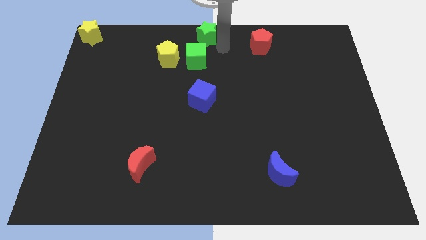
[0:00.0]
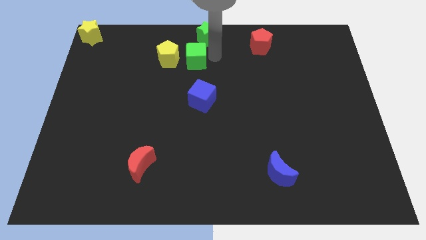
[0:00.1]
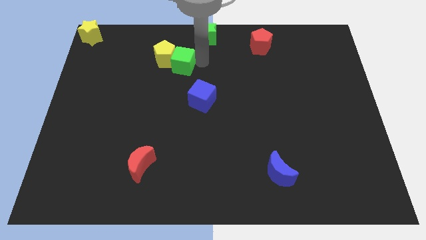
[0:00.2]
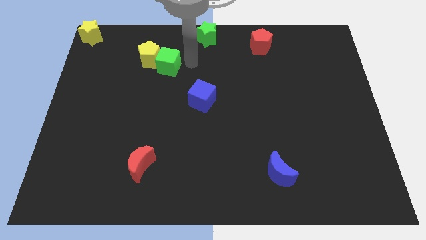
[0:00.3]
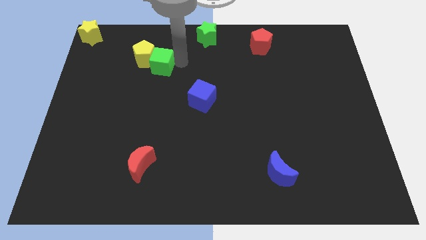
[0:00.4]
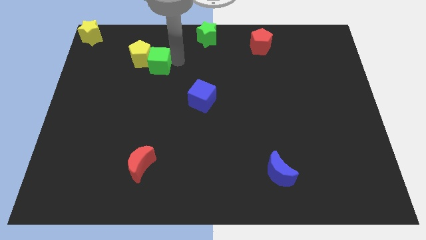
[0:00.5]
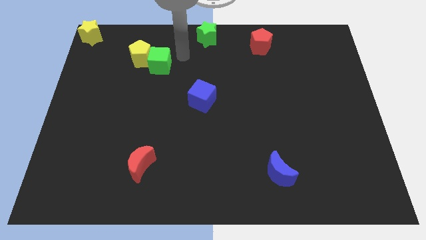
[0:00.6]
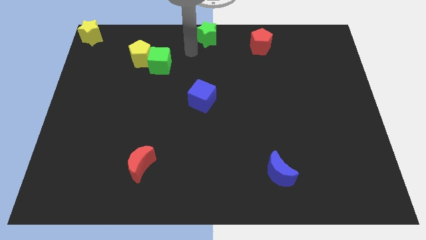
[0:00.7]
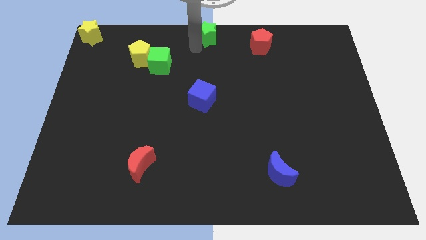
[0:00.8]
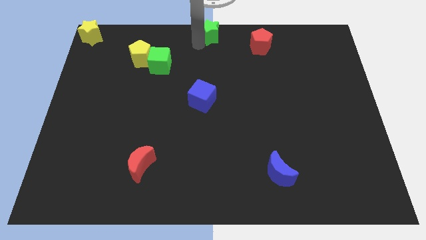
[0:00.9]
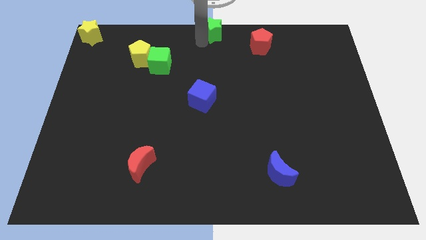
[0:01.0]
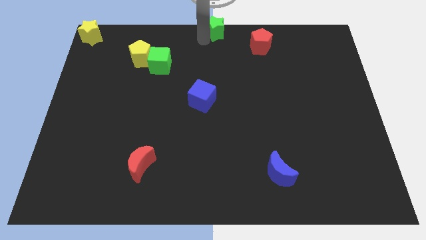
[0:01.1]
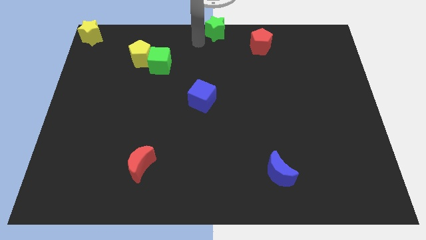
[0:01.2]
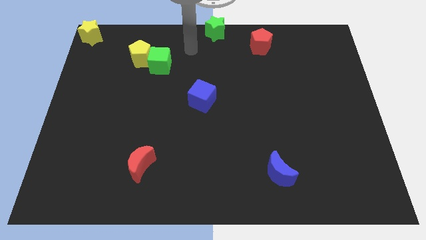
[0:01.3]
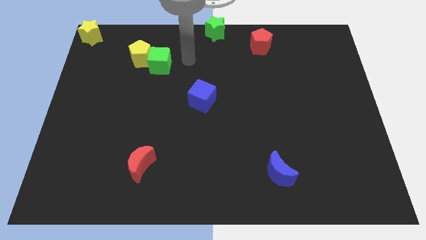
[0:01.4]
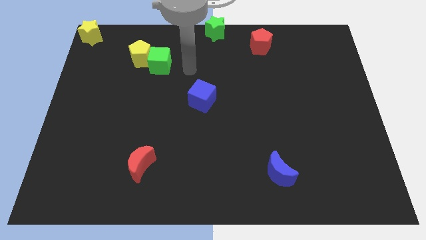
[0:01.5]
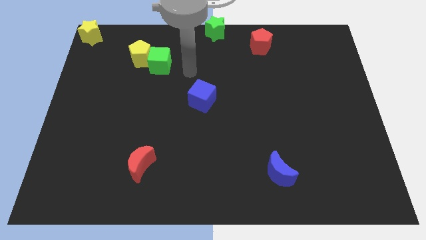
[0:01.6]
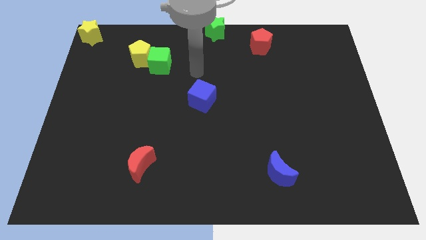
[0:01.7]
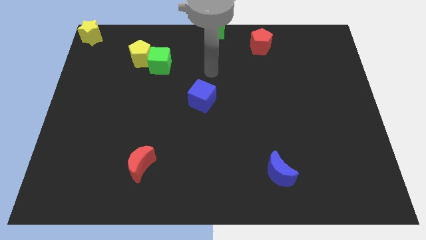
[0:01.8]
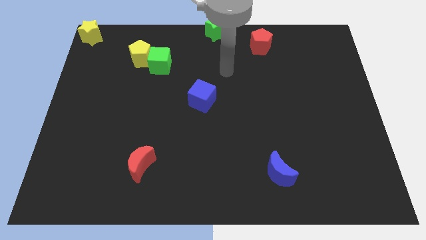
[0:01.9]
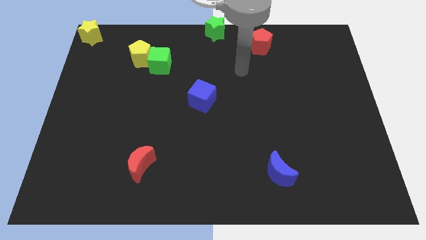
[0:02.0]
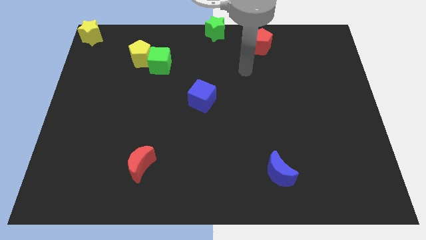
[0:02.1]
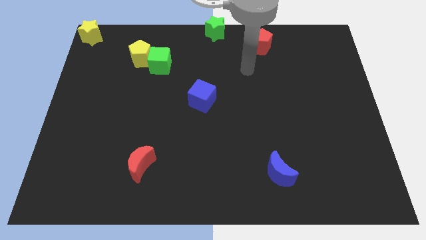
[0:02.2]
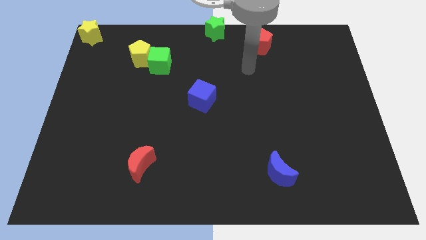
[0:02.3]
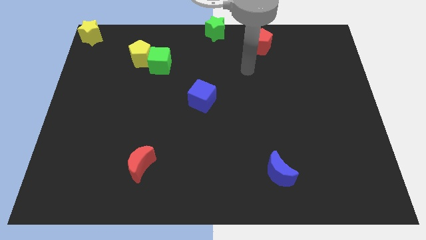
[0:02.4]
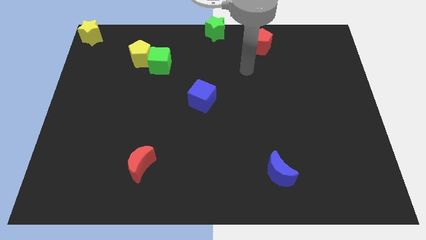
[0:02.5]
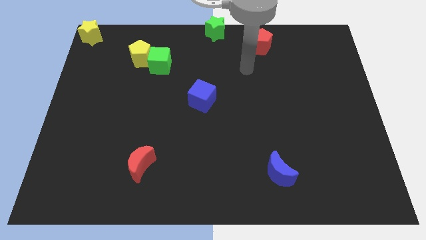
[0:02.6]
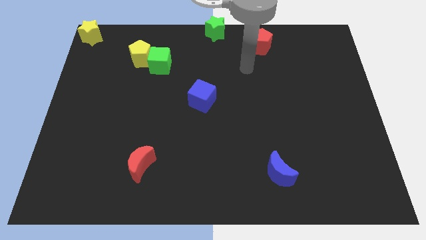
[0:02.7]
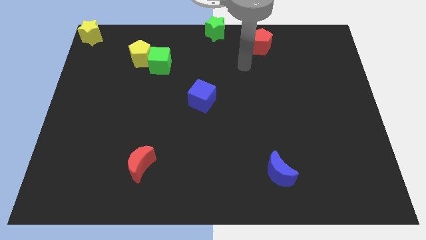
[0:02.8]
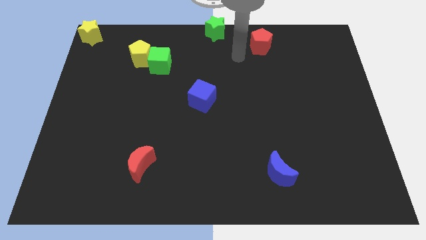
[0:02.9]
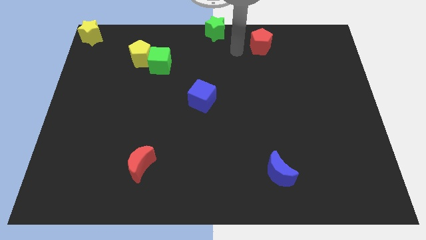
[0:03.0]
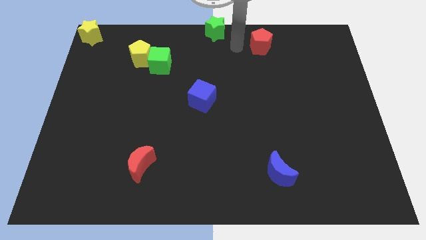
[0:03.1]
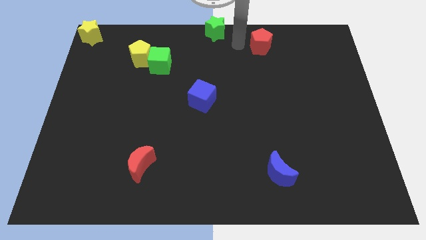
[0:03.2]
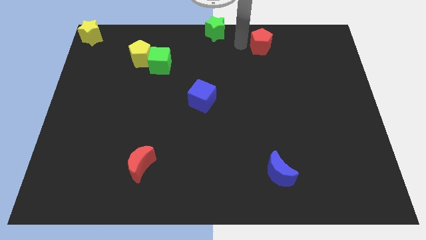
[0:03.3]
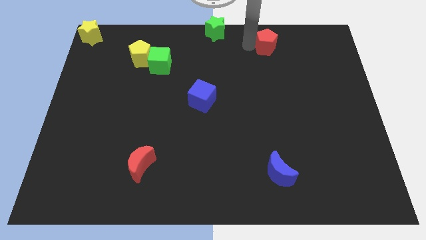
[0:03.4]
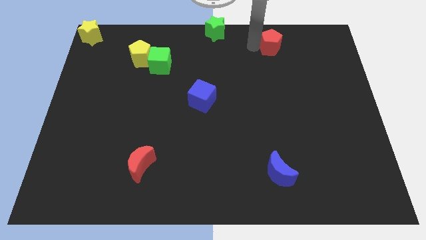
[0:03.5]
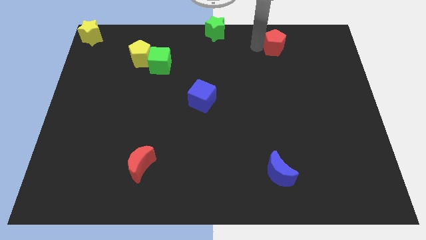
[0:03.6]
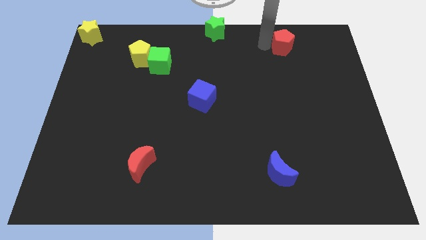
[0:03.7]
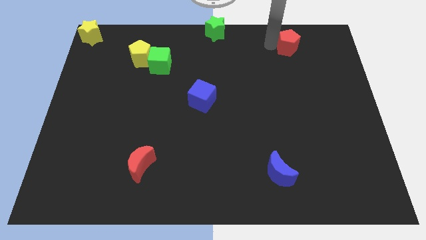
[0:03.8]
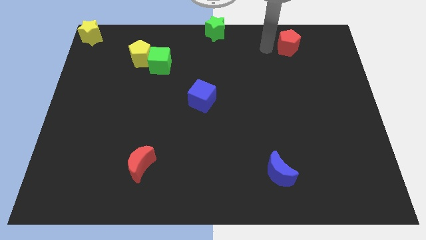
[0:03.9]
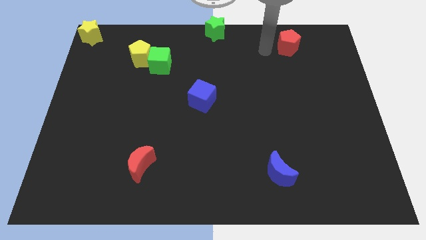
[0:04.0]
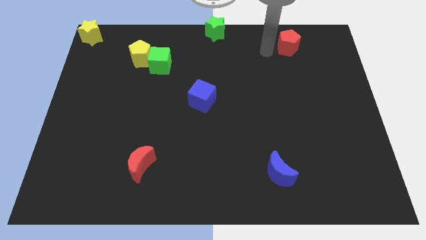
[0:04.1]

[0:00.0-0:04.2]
push the green cube into the yellow pentagon

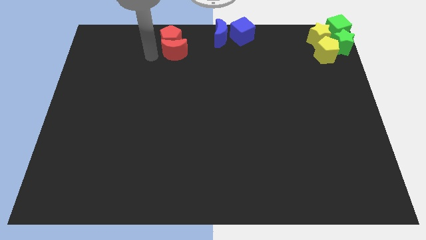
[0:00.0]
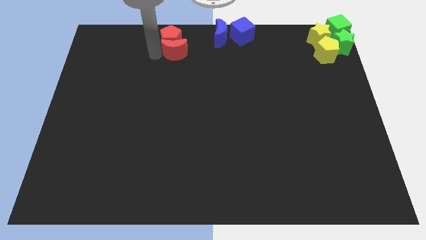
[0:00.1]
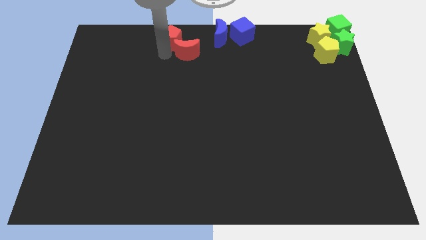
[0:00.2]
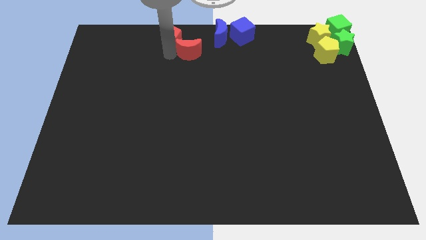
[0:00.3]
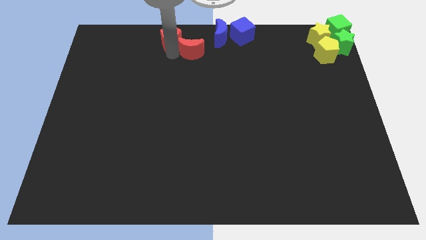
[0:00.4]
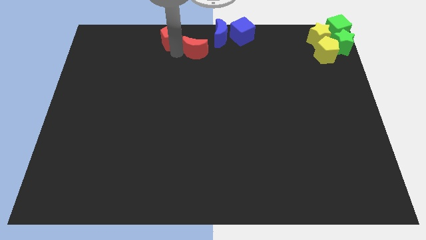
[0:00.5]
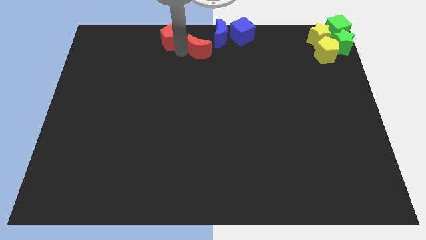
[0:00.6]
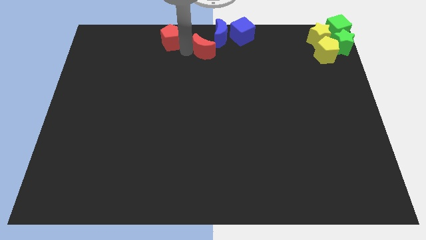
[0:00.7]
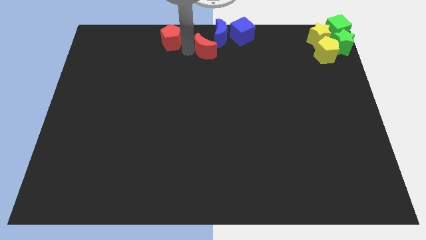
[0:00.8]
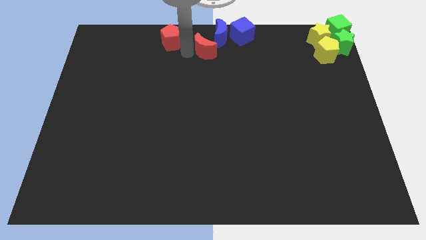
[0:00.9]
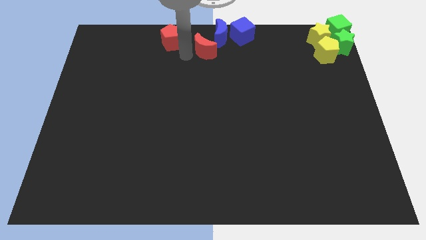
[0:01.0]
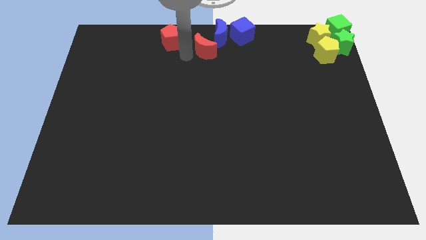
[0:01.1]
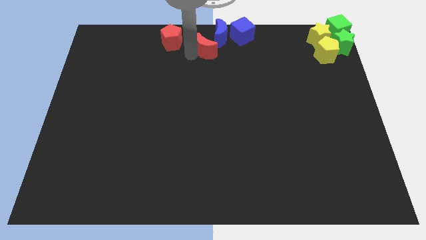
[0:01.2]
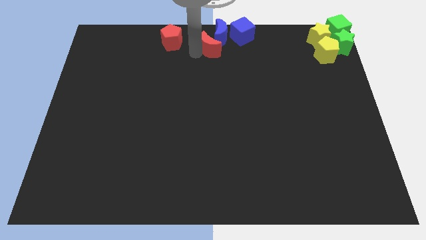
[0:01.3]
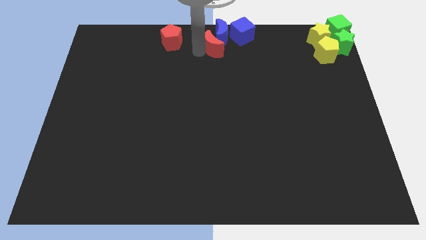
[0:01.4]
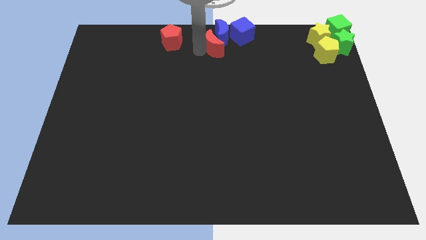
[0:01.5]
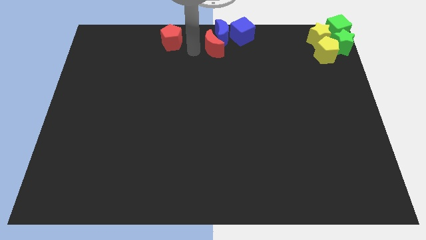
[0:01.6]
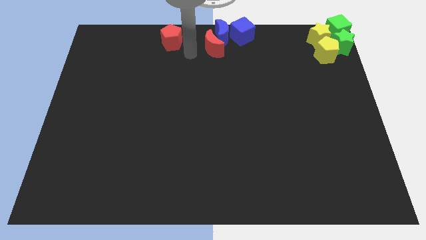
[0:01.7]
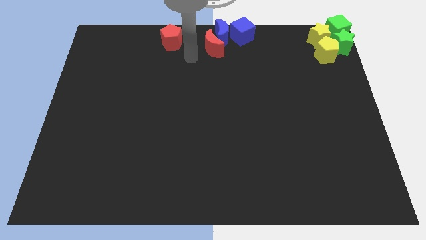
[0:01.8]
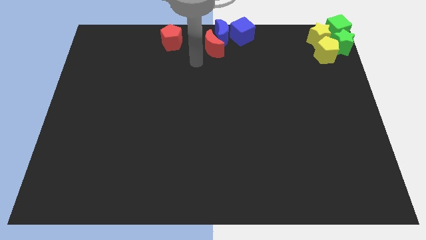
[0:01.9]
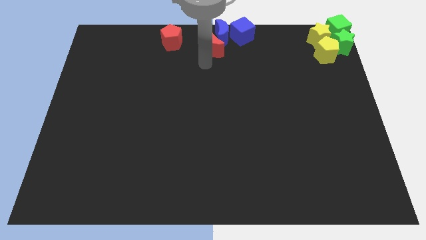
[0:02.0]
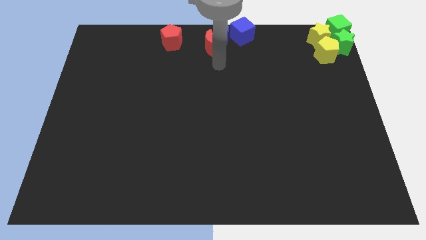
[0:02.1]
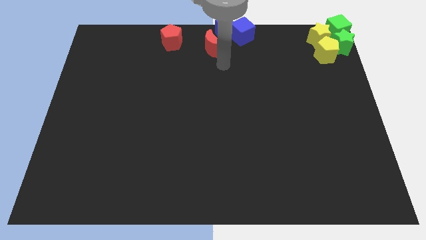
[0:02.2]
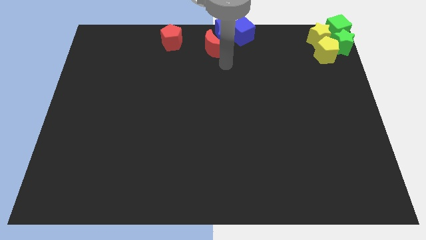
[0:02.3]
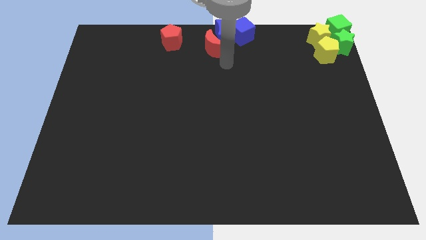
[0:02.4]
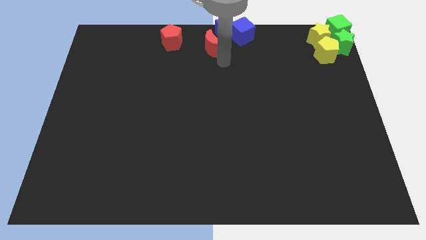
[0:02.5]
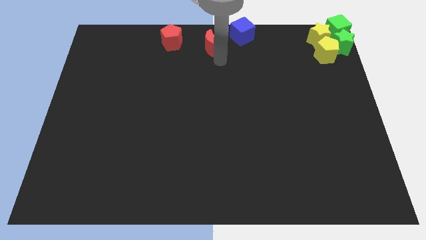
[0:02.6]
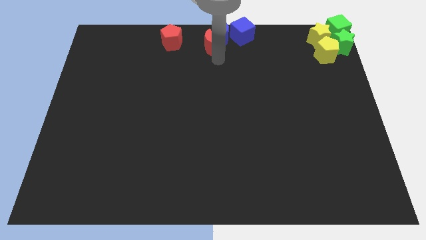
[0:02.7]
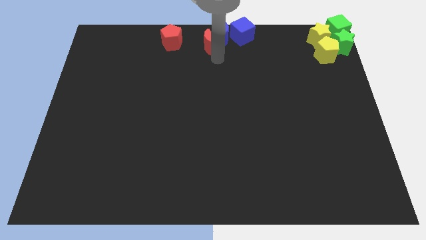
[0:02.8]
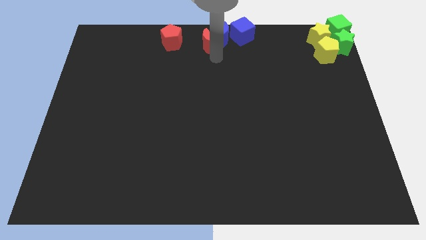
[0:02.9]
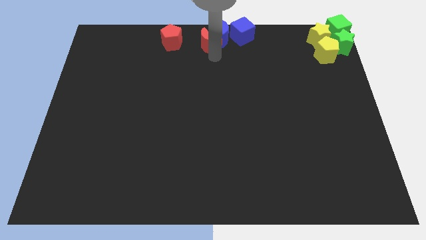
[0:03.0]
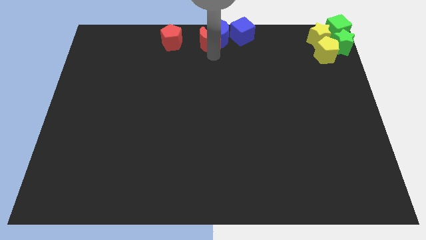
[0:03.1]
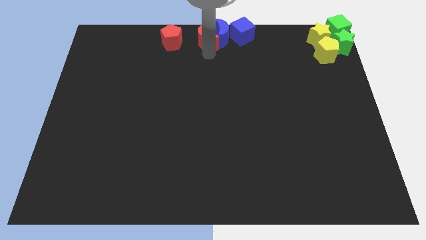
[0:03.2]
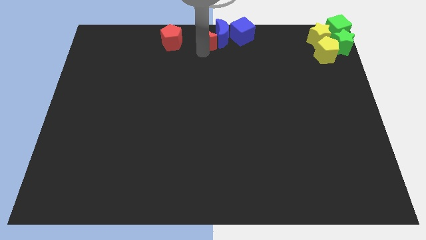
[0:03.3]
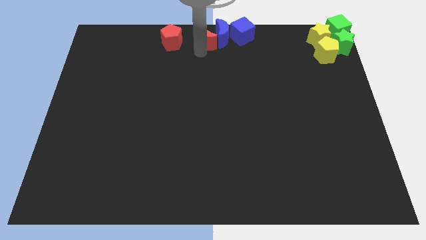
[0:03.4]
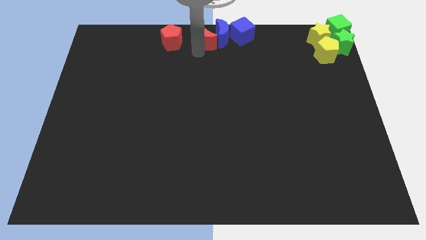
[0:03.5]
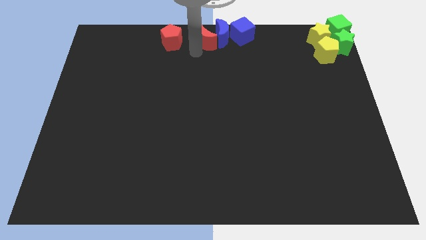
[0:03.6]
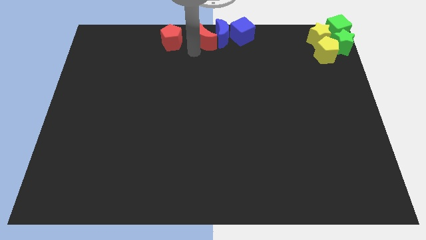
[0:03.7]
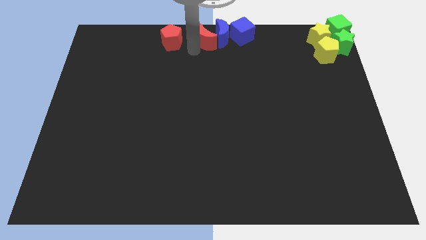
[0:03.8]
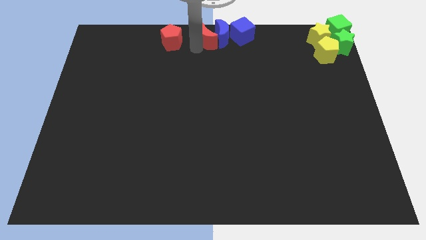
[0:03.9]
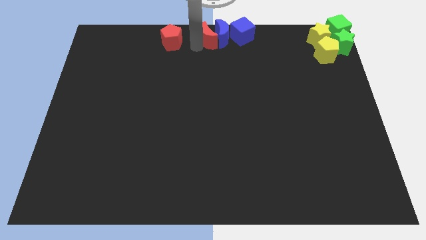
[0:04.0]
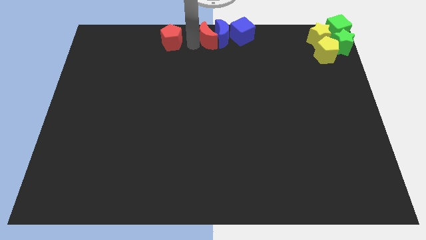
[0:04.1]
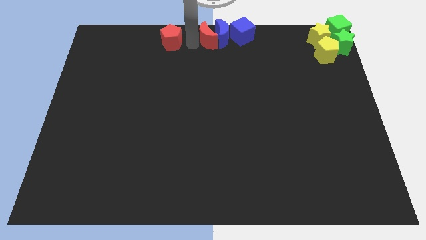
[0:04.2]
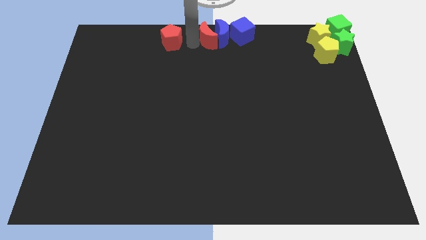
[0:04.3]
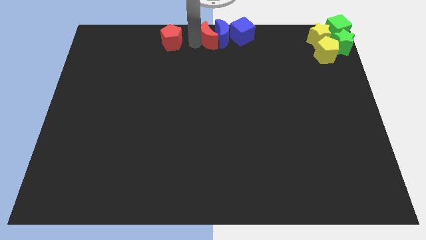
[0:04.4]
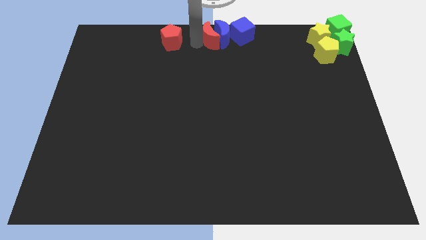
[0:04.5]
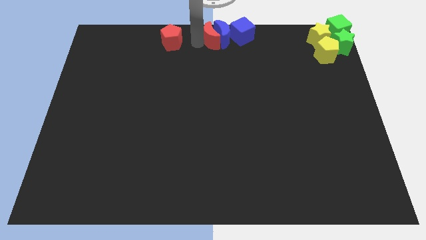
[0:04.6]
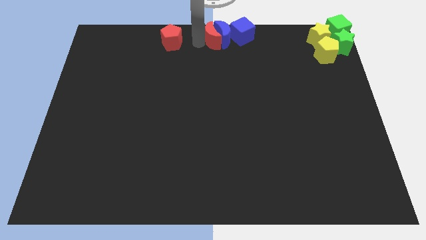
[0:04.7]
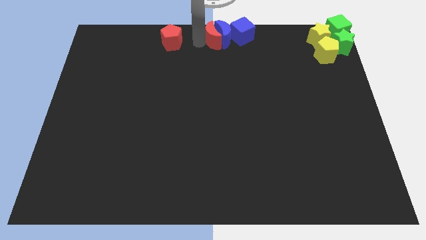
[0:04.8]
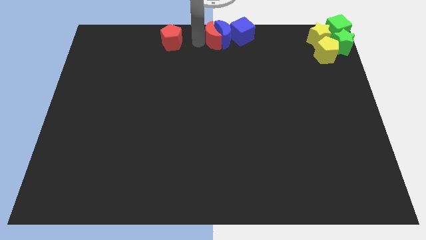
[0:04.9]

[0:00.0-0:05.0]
place the red crescent to the left of blue crescent
